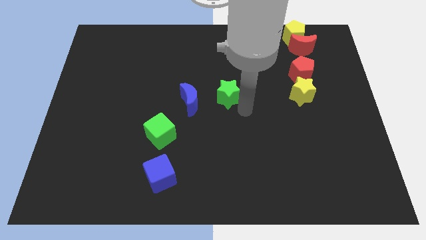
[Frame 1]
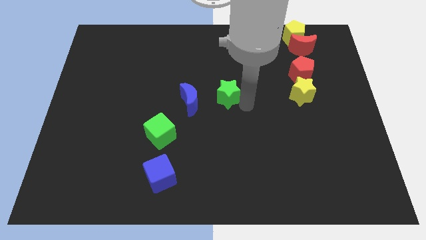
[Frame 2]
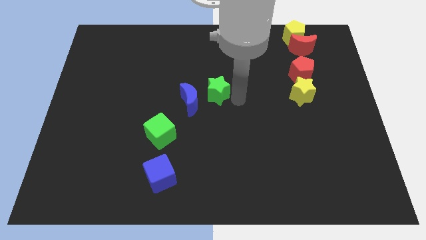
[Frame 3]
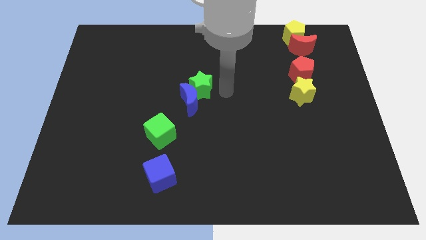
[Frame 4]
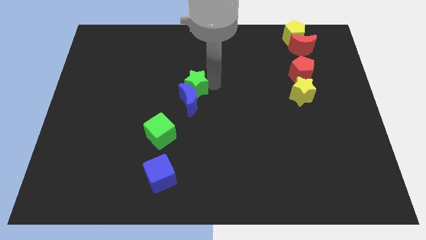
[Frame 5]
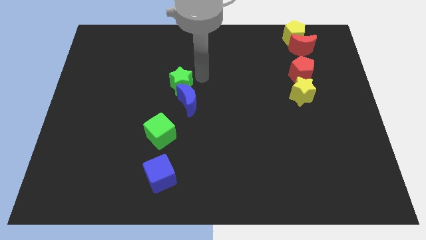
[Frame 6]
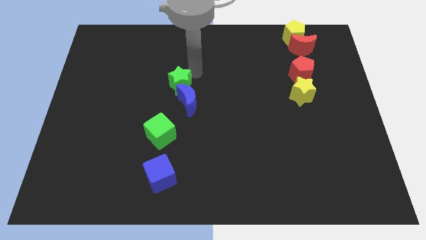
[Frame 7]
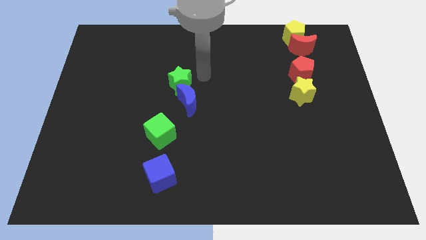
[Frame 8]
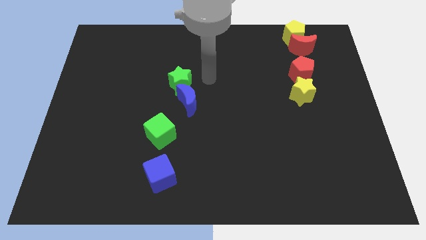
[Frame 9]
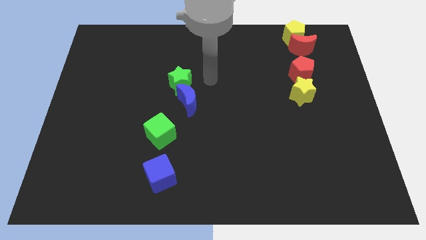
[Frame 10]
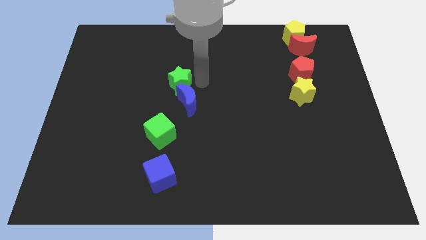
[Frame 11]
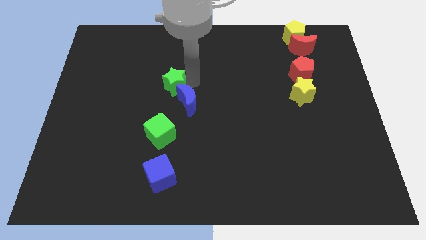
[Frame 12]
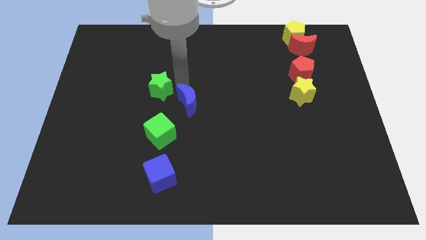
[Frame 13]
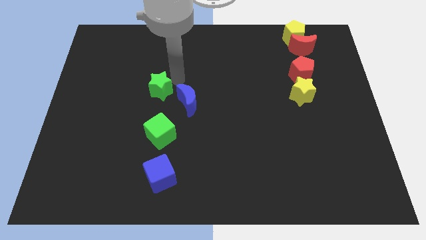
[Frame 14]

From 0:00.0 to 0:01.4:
arrange the green star on the top left side of the blue moon

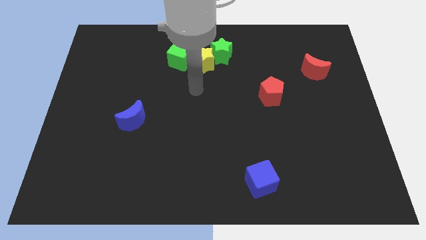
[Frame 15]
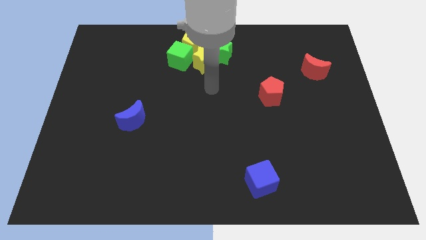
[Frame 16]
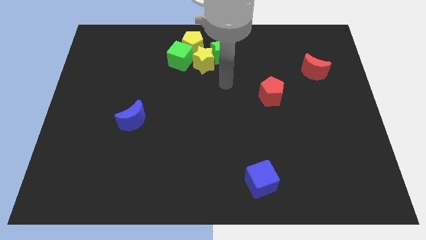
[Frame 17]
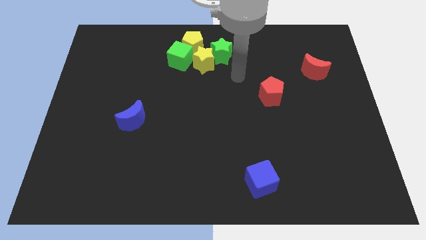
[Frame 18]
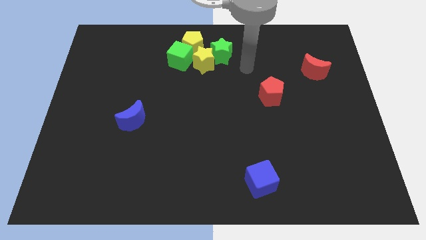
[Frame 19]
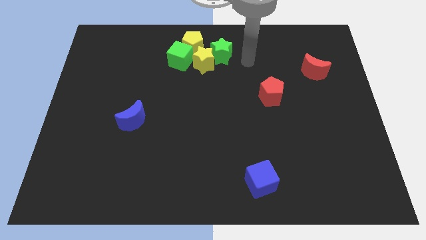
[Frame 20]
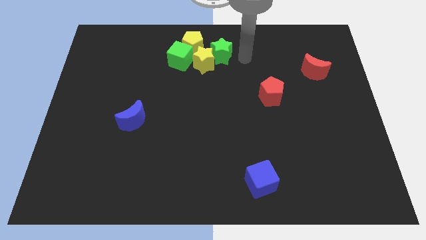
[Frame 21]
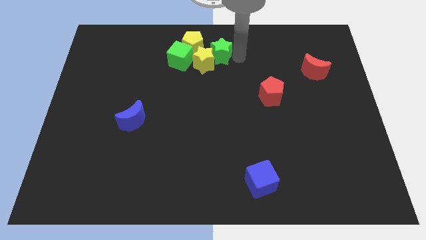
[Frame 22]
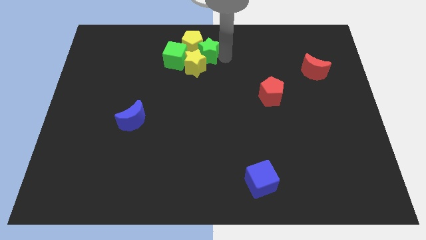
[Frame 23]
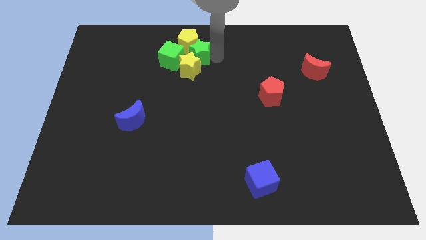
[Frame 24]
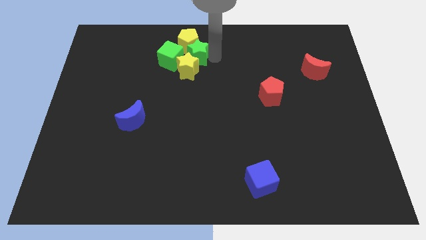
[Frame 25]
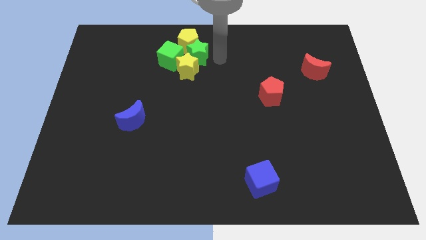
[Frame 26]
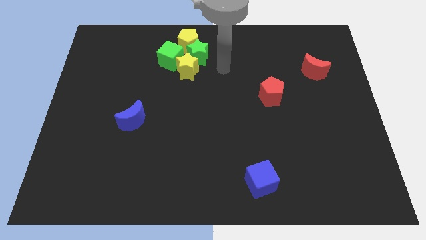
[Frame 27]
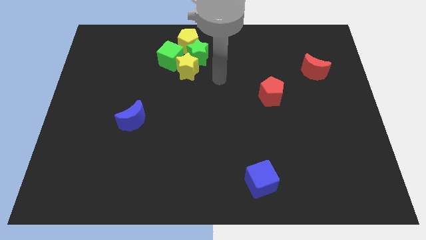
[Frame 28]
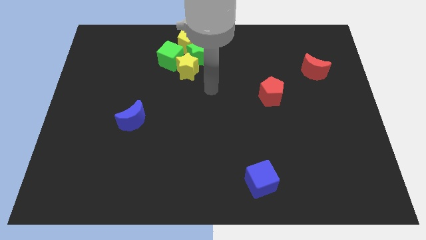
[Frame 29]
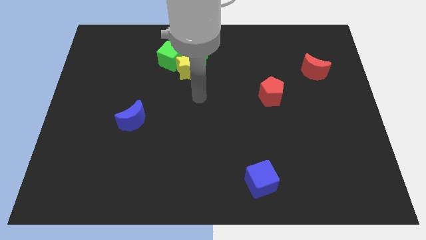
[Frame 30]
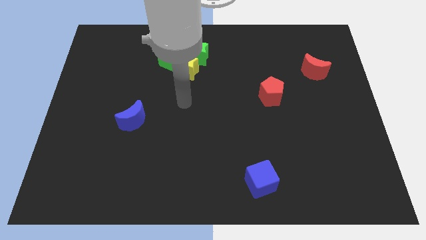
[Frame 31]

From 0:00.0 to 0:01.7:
push green star to the right

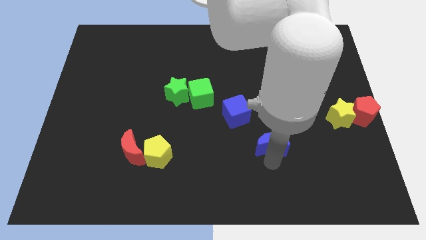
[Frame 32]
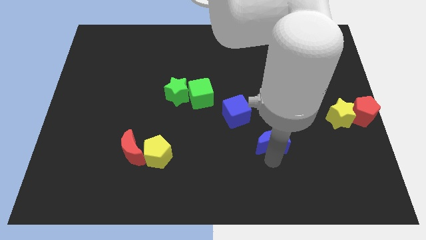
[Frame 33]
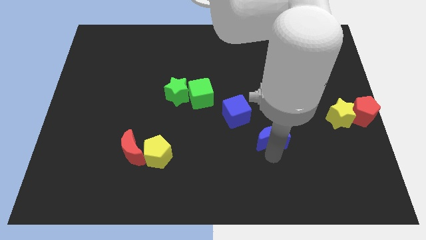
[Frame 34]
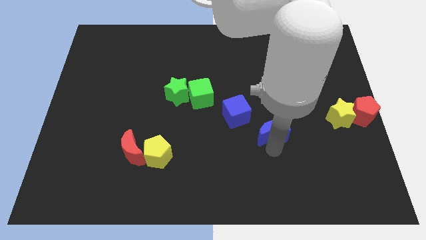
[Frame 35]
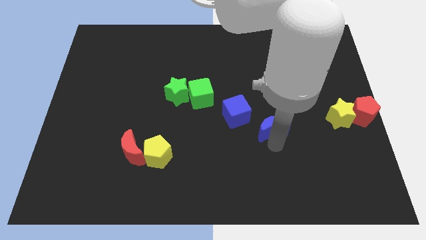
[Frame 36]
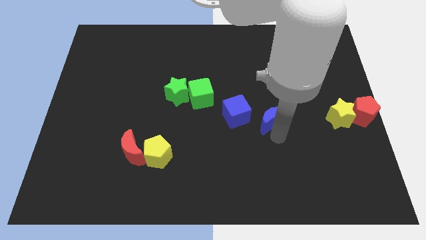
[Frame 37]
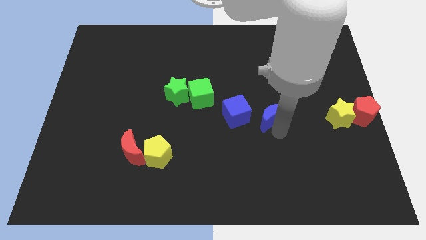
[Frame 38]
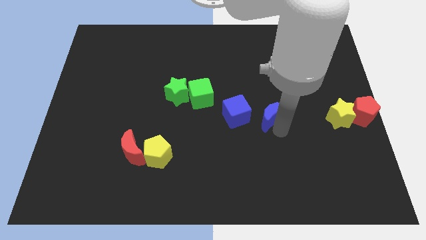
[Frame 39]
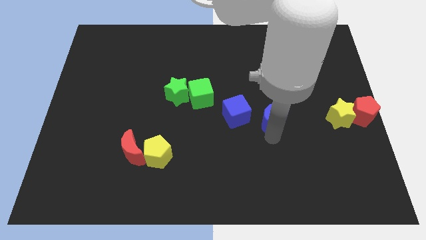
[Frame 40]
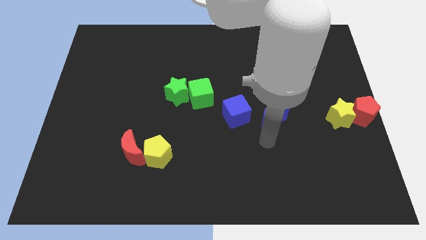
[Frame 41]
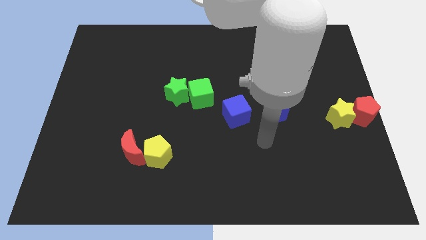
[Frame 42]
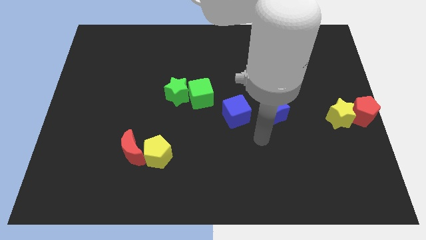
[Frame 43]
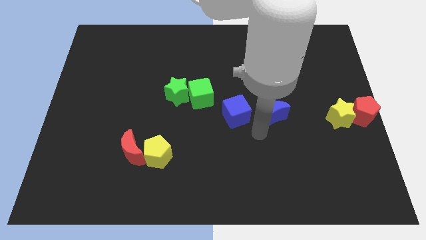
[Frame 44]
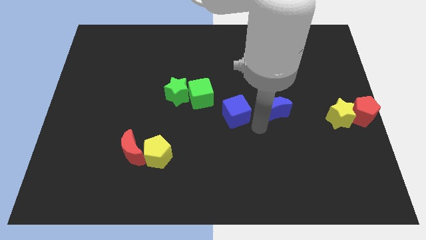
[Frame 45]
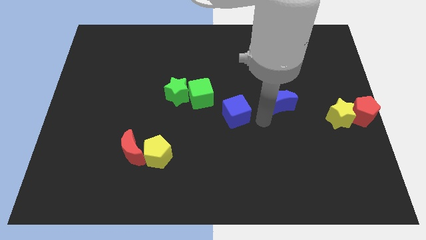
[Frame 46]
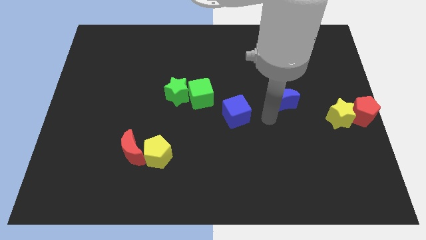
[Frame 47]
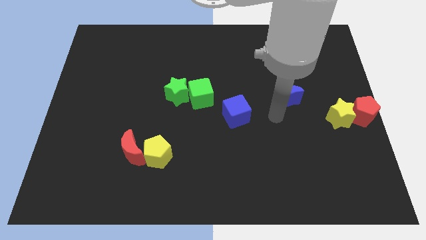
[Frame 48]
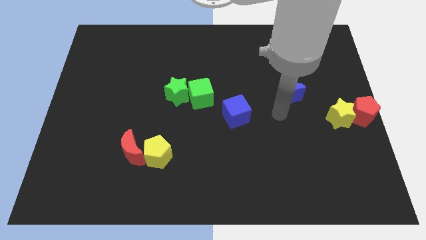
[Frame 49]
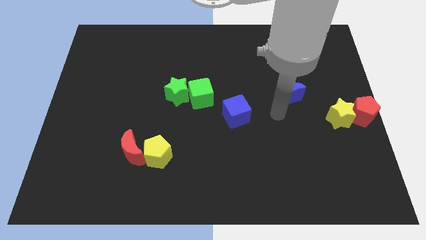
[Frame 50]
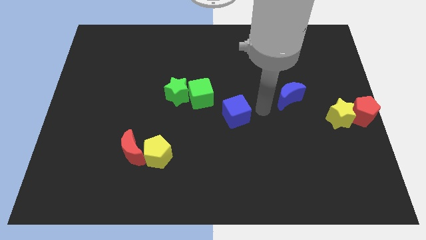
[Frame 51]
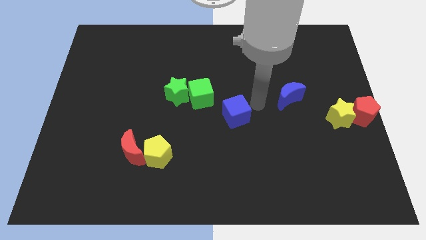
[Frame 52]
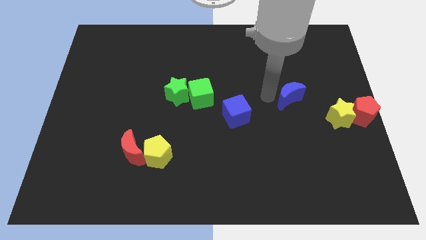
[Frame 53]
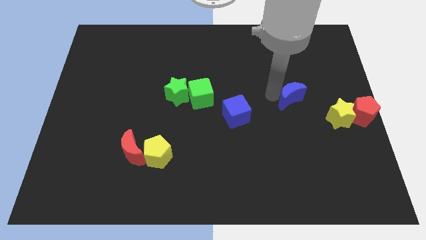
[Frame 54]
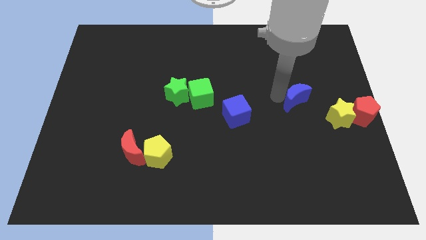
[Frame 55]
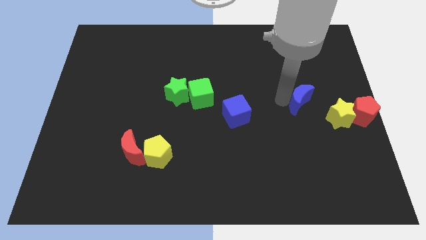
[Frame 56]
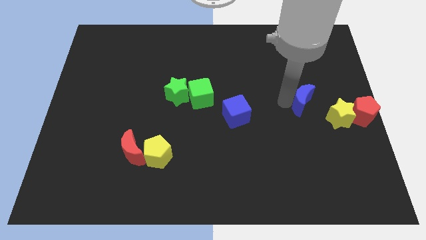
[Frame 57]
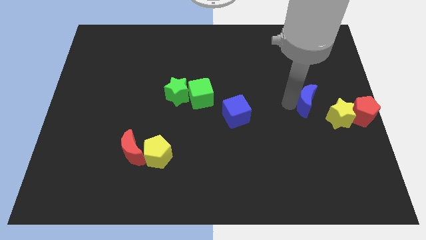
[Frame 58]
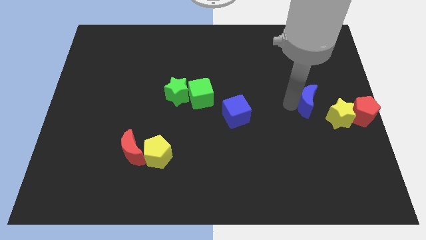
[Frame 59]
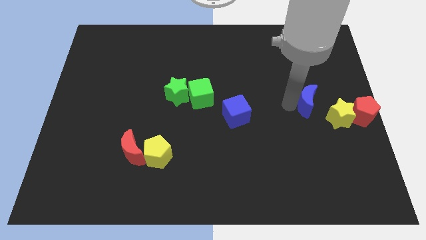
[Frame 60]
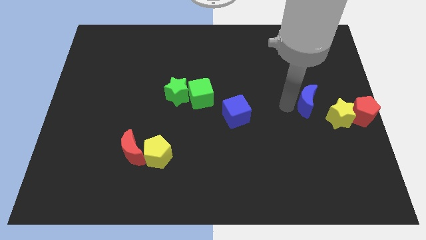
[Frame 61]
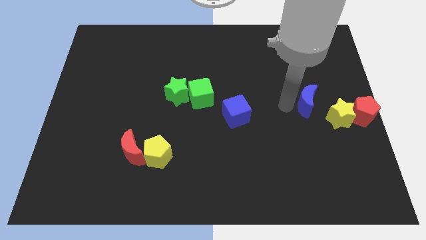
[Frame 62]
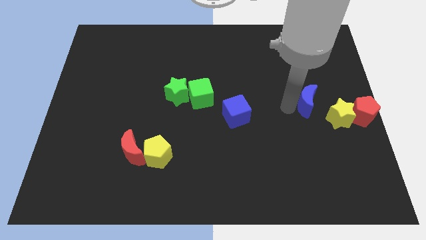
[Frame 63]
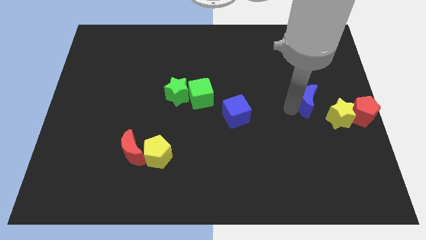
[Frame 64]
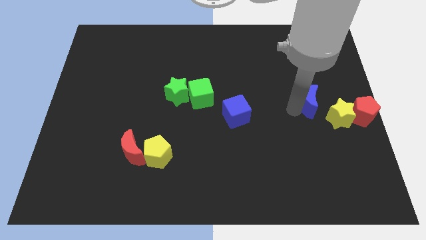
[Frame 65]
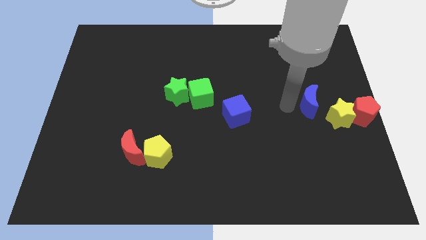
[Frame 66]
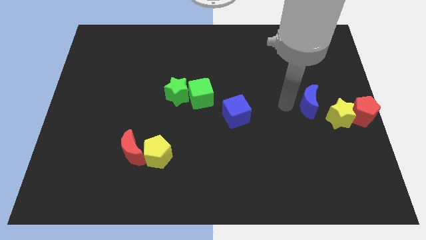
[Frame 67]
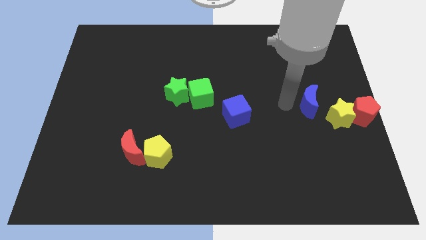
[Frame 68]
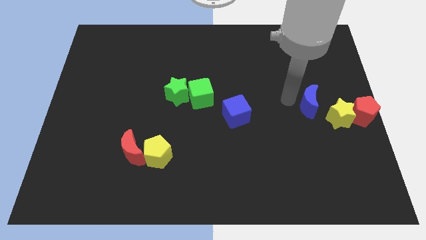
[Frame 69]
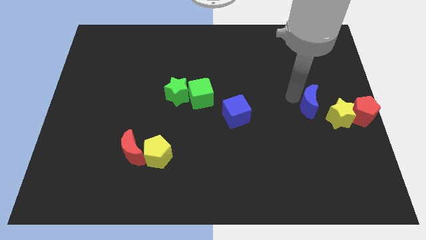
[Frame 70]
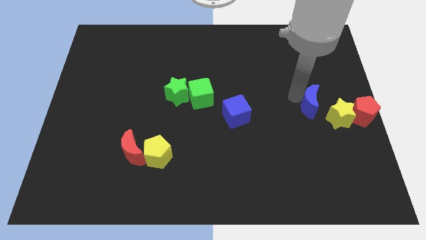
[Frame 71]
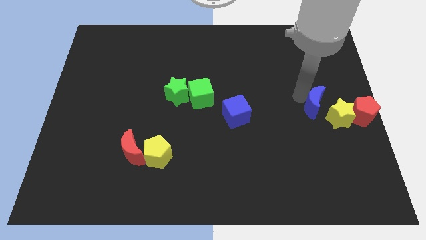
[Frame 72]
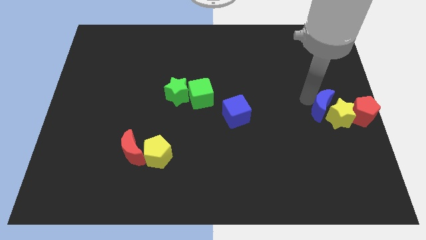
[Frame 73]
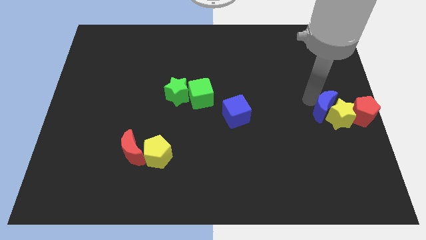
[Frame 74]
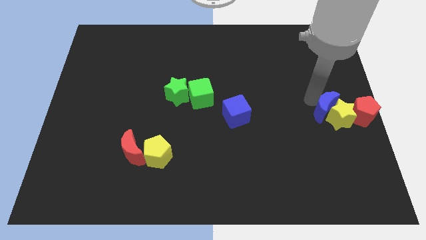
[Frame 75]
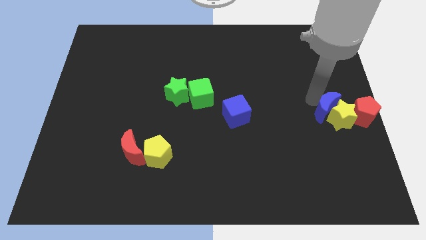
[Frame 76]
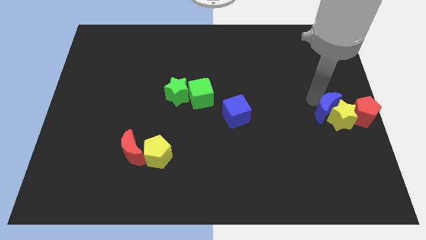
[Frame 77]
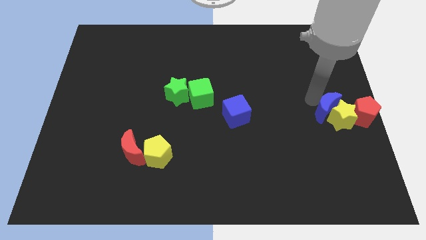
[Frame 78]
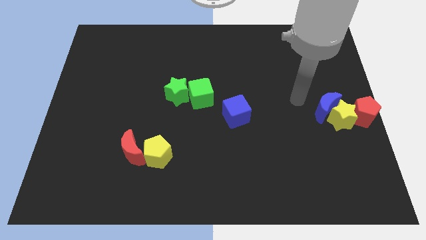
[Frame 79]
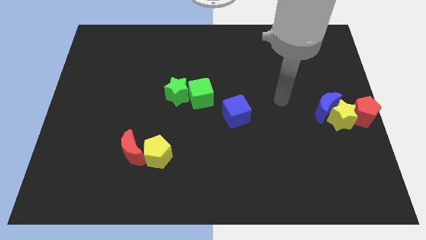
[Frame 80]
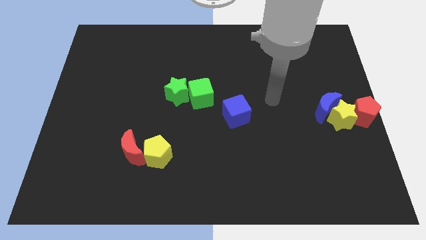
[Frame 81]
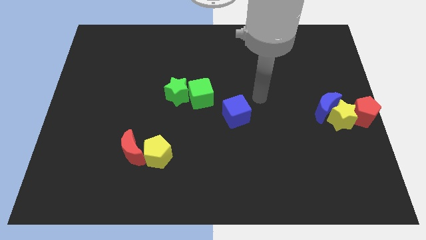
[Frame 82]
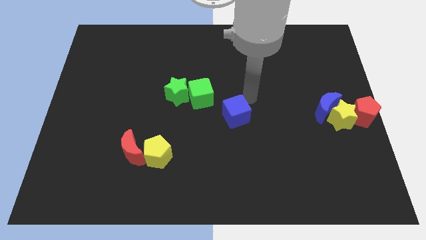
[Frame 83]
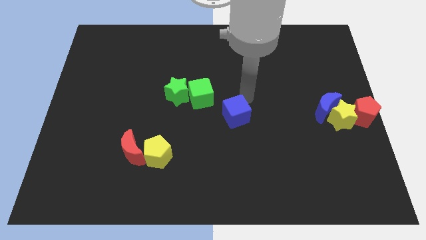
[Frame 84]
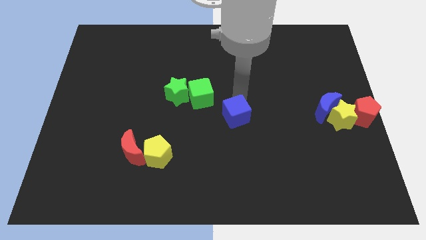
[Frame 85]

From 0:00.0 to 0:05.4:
push the blue moon into the yellow star

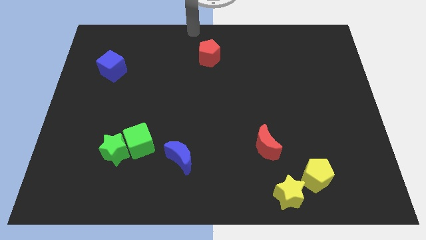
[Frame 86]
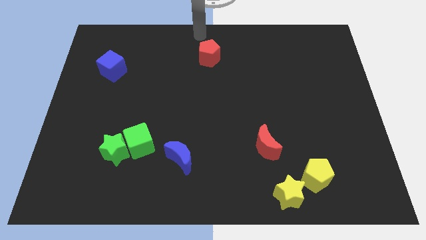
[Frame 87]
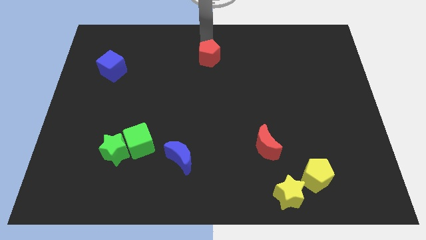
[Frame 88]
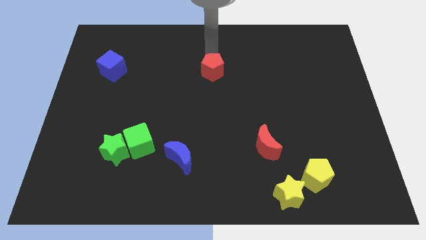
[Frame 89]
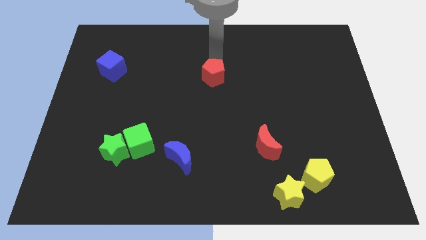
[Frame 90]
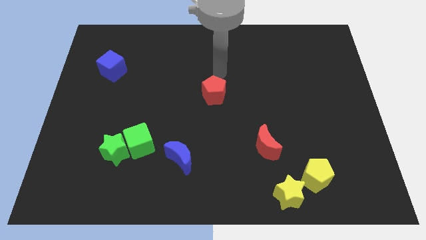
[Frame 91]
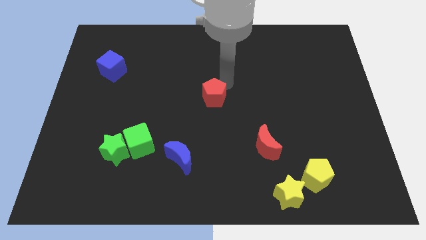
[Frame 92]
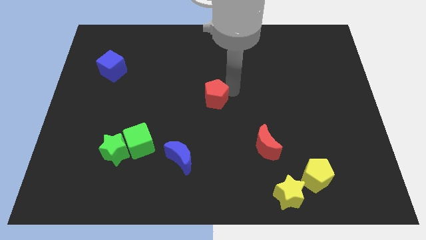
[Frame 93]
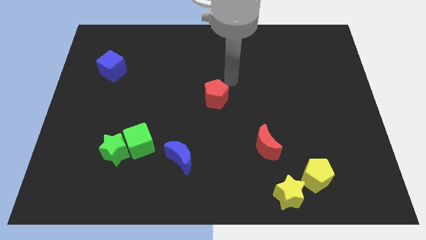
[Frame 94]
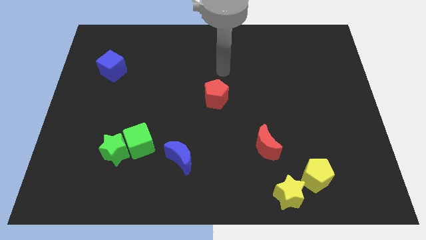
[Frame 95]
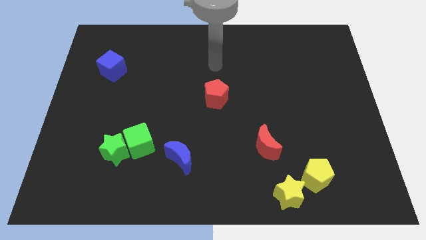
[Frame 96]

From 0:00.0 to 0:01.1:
push red pentagon towards center
